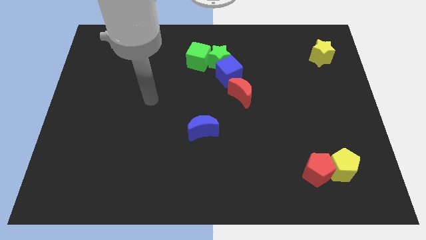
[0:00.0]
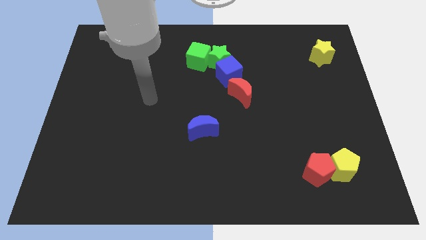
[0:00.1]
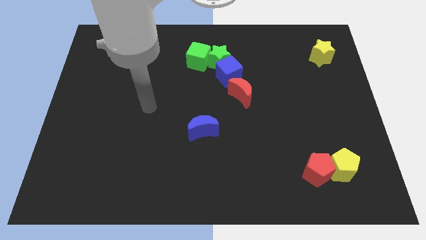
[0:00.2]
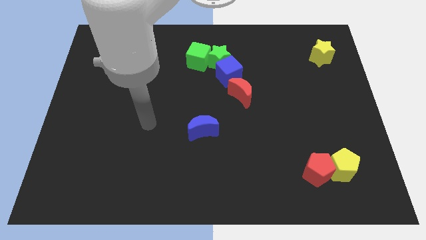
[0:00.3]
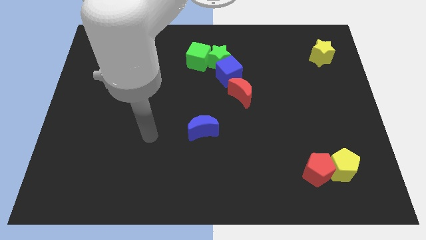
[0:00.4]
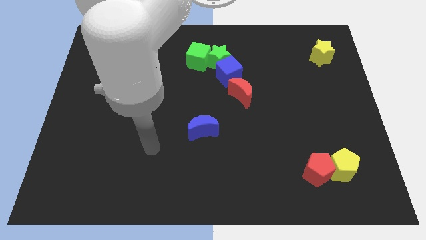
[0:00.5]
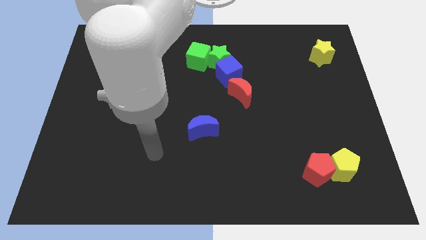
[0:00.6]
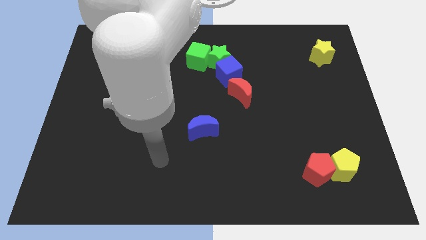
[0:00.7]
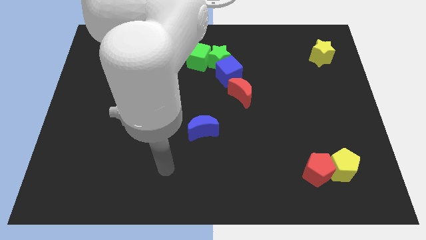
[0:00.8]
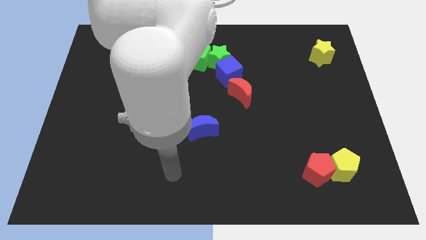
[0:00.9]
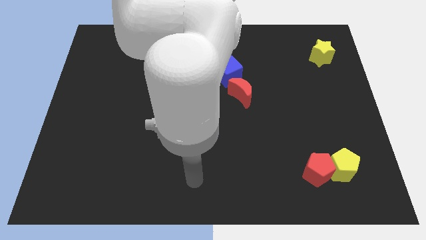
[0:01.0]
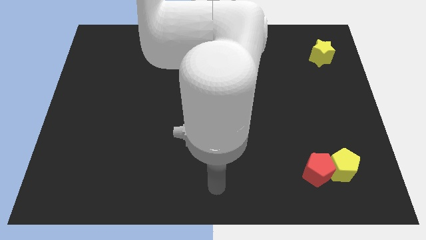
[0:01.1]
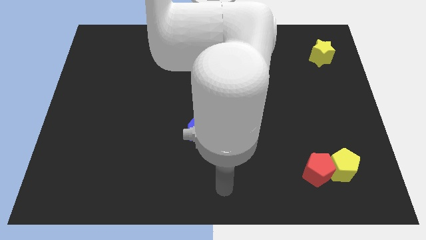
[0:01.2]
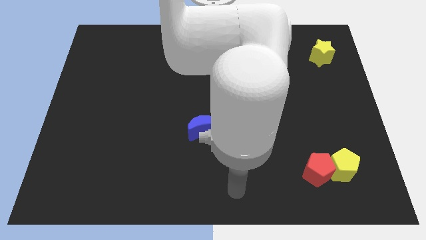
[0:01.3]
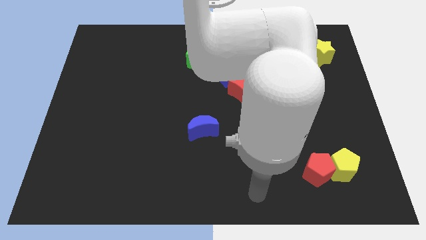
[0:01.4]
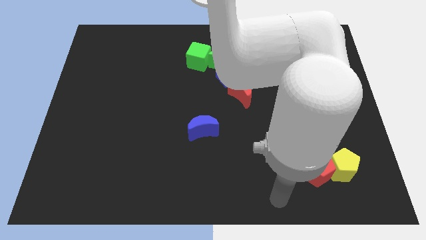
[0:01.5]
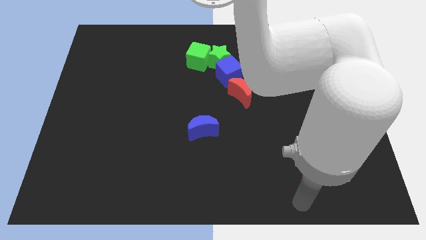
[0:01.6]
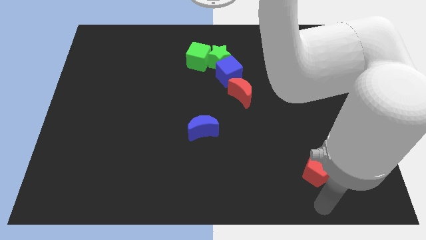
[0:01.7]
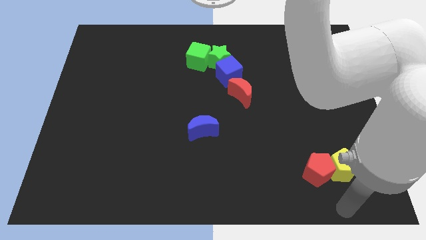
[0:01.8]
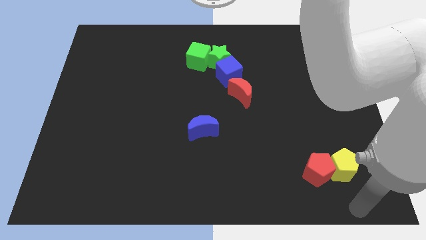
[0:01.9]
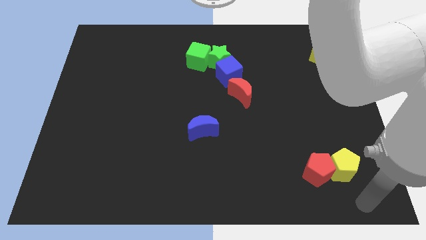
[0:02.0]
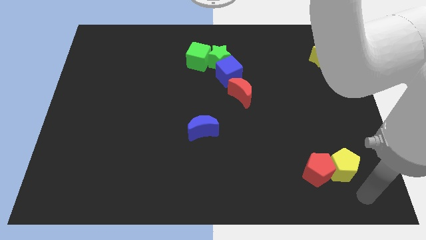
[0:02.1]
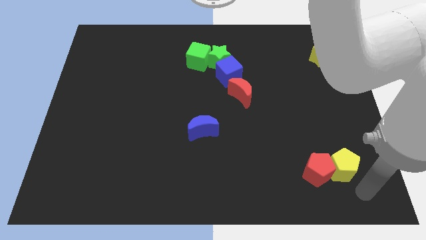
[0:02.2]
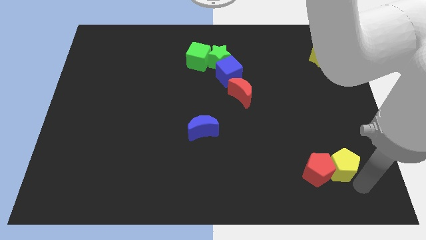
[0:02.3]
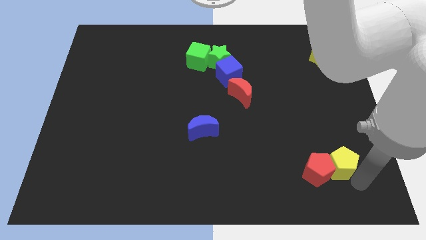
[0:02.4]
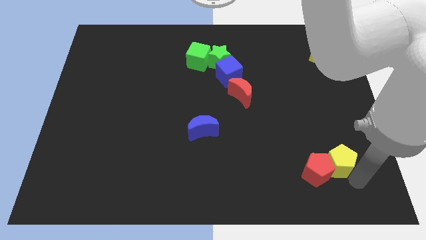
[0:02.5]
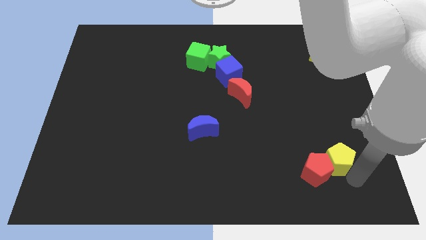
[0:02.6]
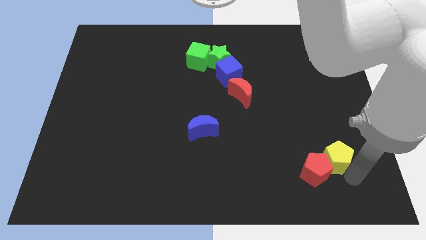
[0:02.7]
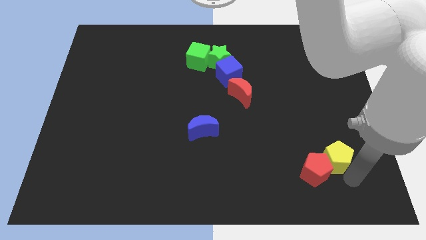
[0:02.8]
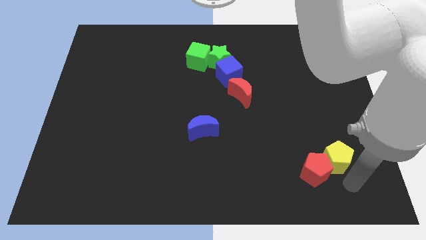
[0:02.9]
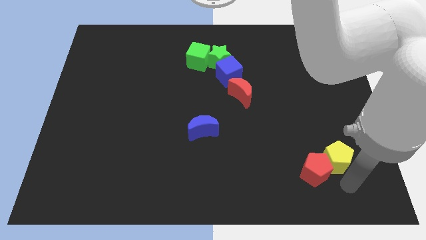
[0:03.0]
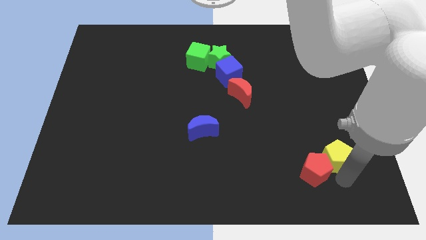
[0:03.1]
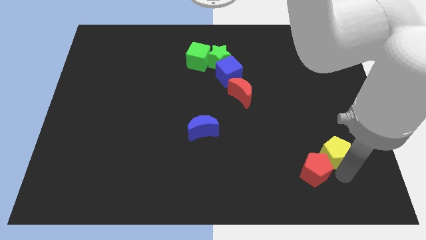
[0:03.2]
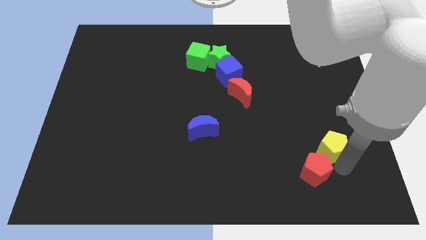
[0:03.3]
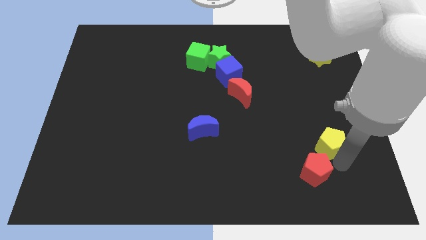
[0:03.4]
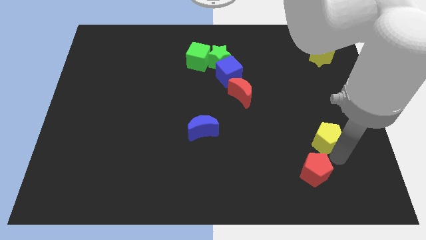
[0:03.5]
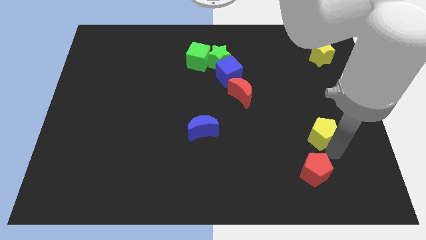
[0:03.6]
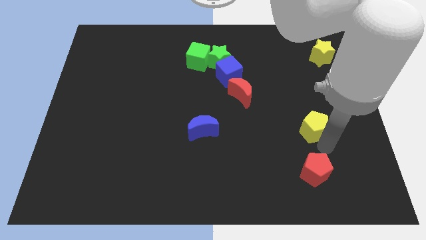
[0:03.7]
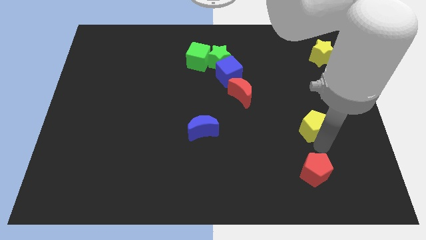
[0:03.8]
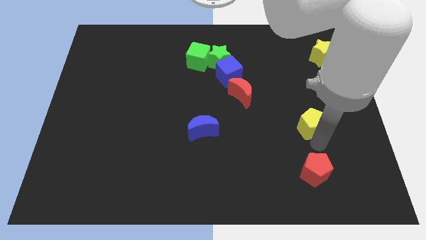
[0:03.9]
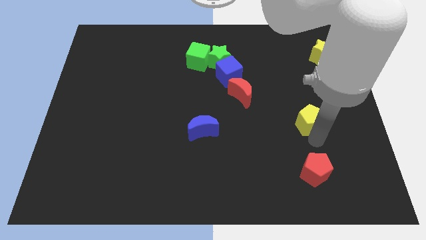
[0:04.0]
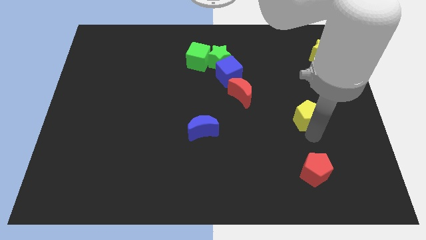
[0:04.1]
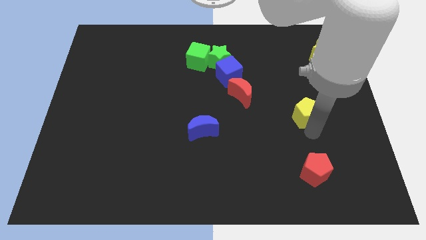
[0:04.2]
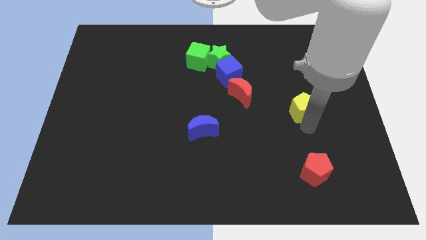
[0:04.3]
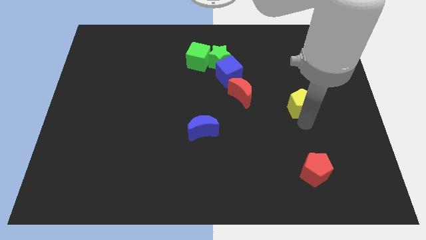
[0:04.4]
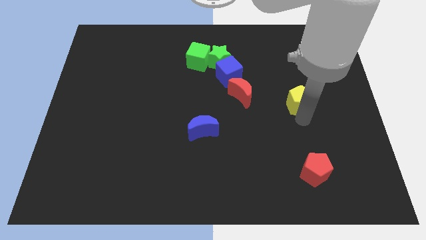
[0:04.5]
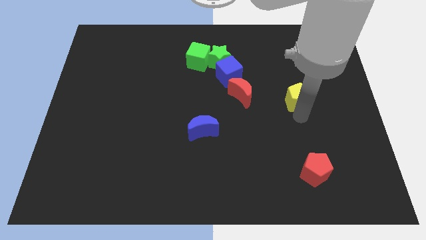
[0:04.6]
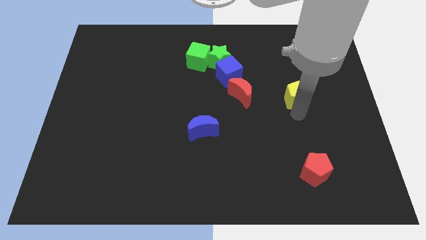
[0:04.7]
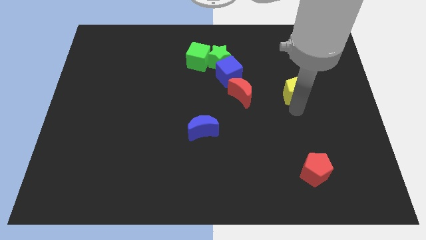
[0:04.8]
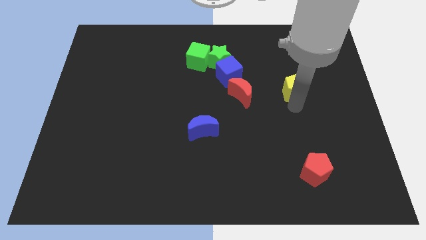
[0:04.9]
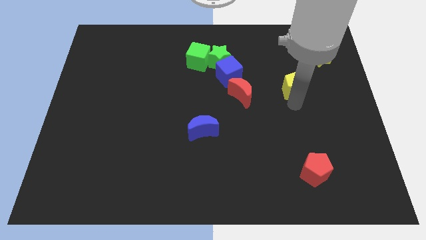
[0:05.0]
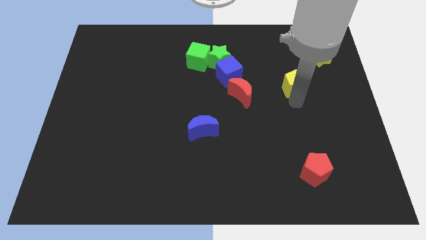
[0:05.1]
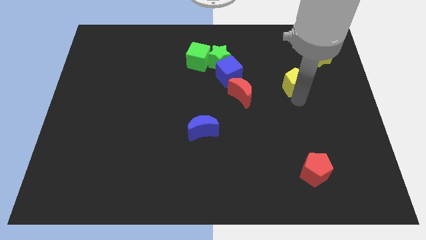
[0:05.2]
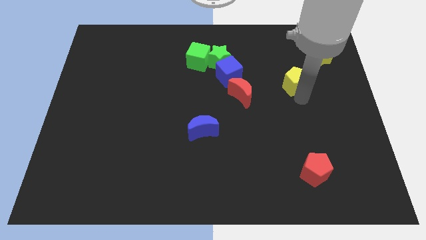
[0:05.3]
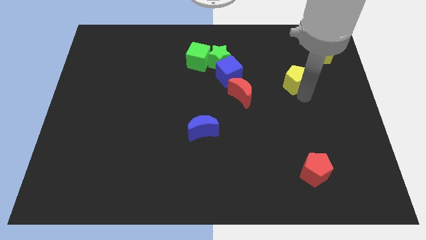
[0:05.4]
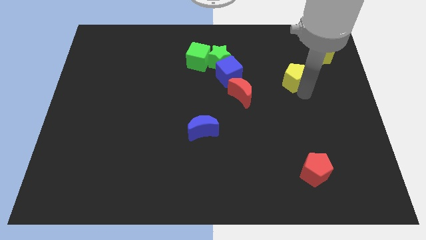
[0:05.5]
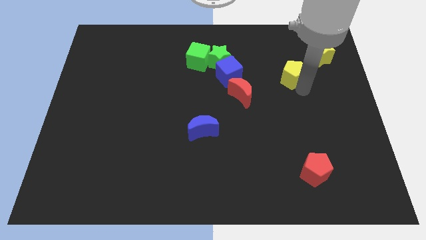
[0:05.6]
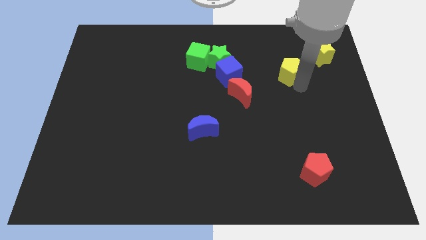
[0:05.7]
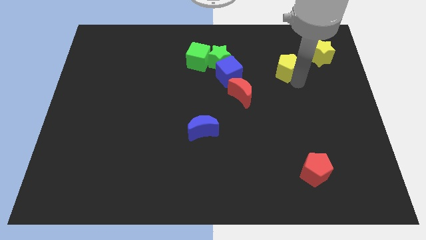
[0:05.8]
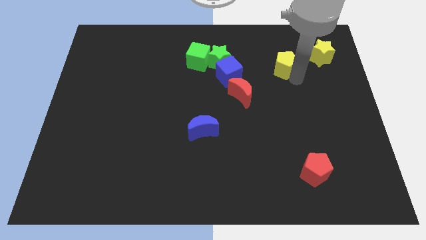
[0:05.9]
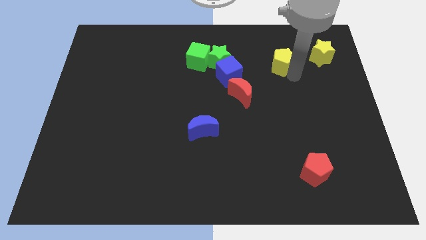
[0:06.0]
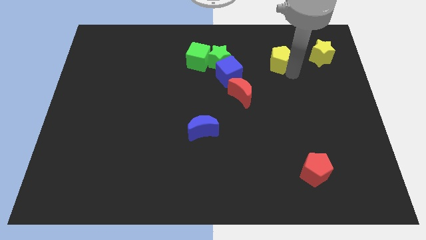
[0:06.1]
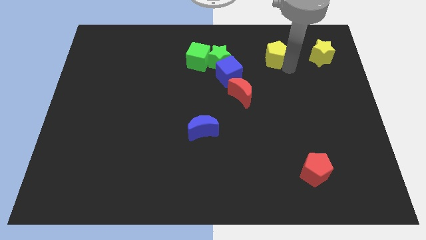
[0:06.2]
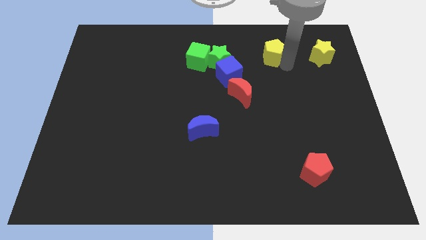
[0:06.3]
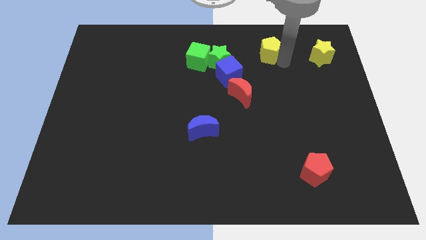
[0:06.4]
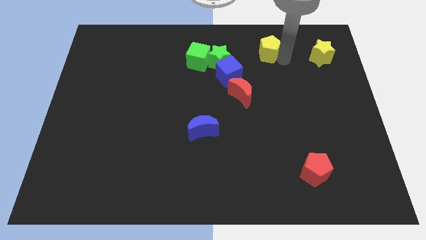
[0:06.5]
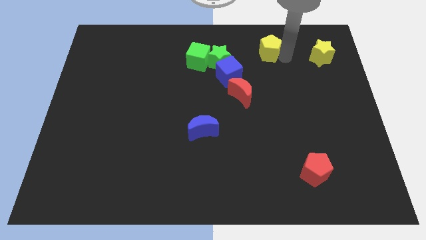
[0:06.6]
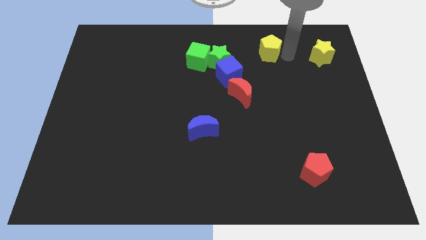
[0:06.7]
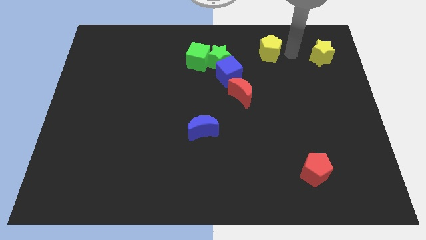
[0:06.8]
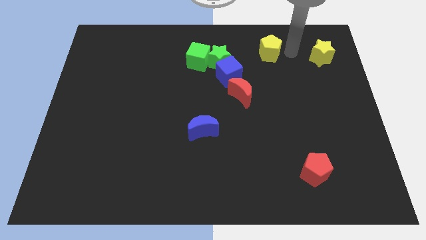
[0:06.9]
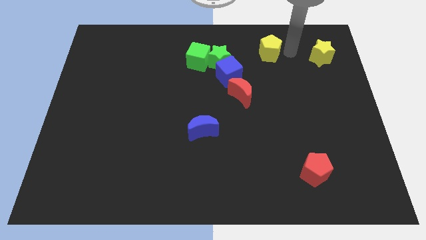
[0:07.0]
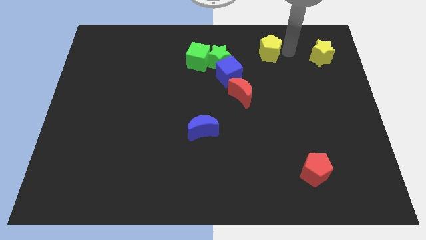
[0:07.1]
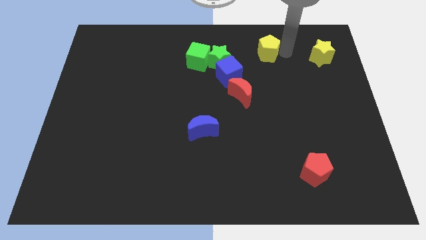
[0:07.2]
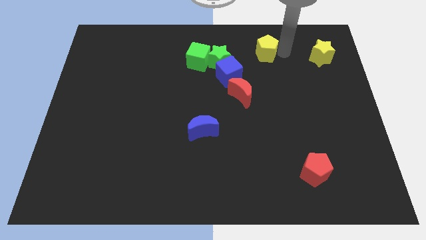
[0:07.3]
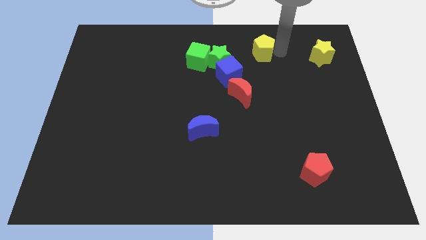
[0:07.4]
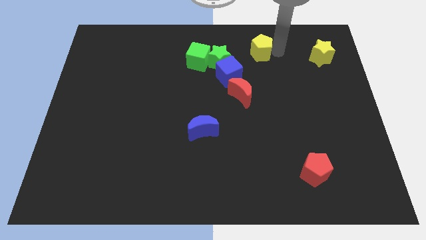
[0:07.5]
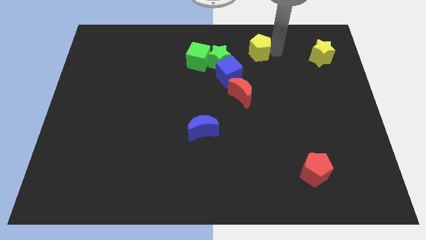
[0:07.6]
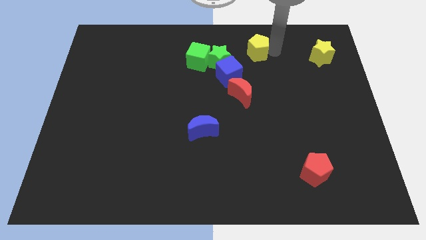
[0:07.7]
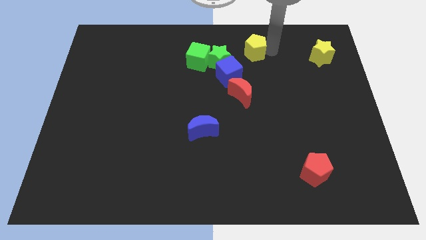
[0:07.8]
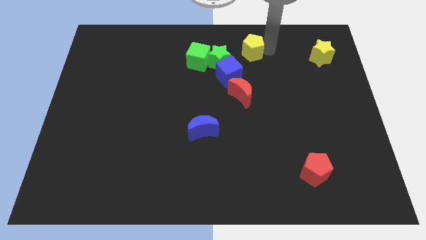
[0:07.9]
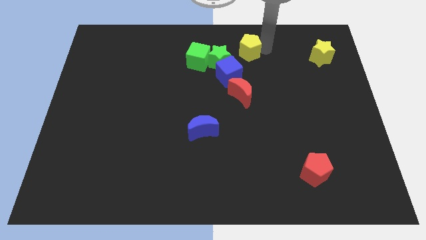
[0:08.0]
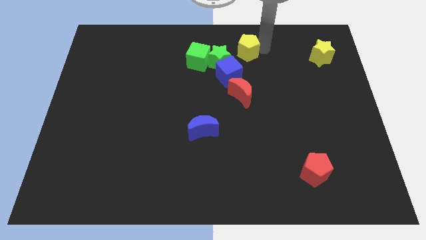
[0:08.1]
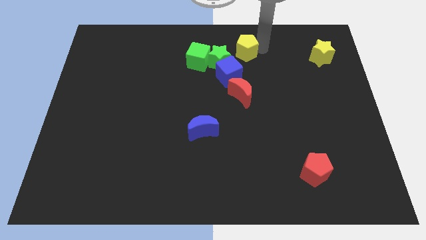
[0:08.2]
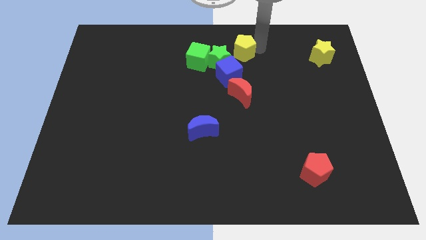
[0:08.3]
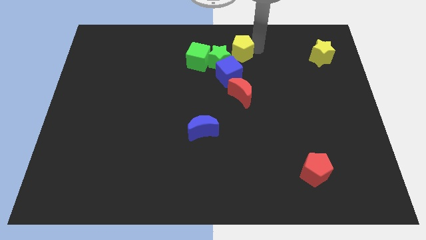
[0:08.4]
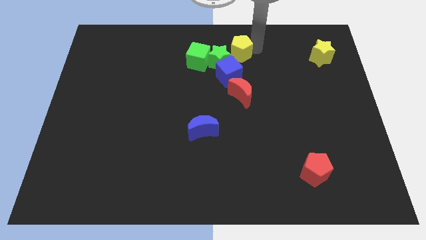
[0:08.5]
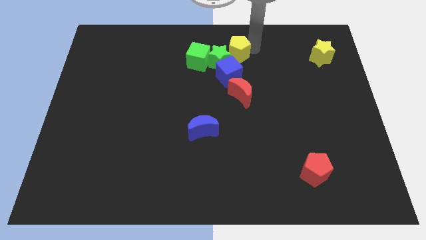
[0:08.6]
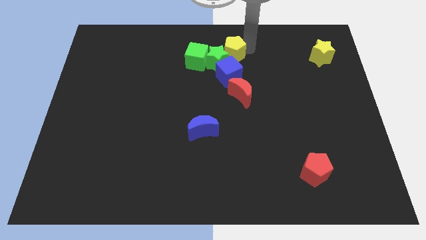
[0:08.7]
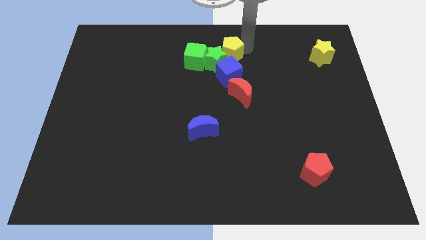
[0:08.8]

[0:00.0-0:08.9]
move the yellow pentagon next to the green star
